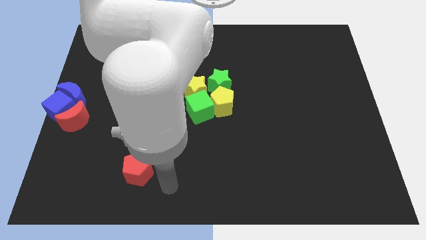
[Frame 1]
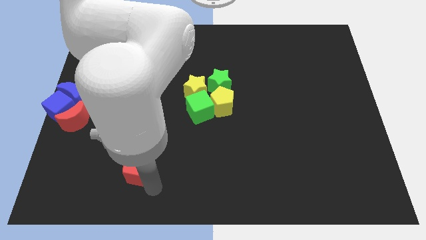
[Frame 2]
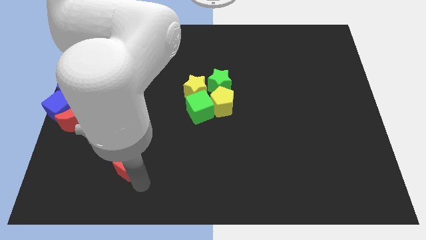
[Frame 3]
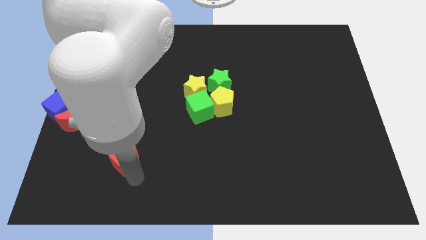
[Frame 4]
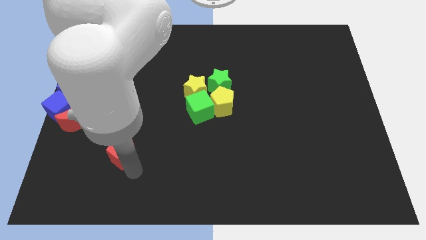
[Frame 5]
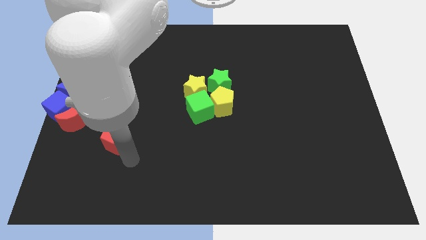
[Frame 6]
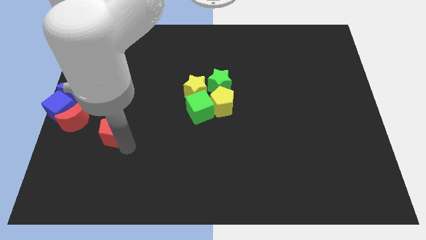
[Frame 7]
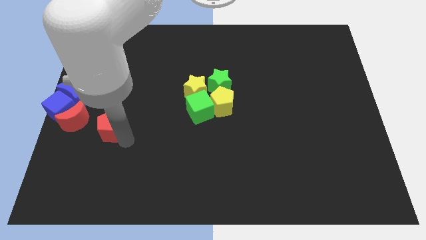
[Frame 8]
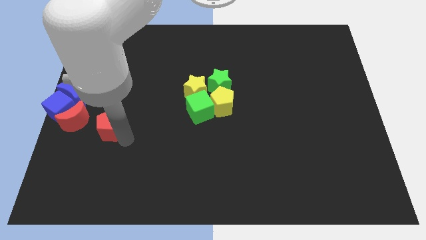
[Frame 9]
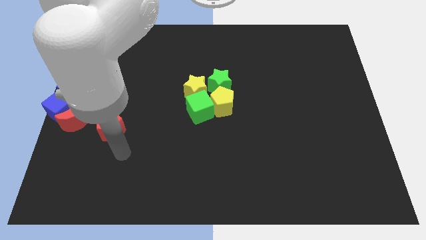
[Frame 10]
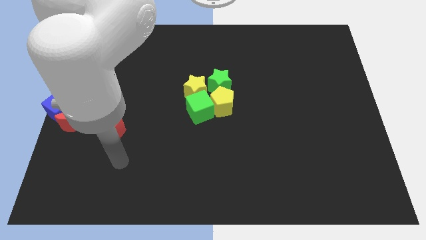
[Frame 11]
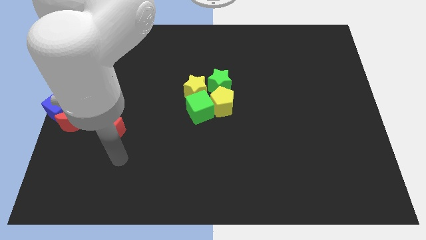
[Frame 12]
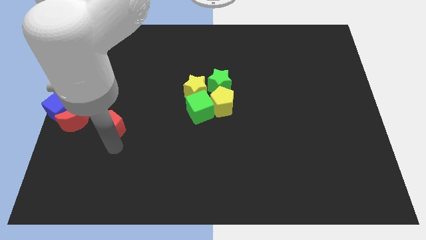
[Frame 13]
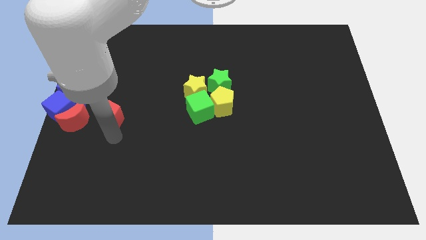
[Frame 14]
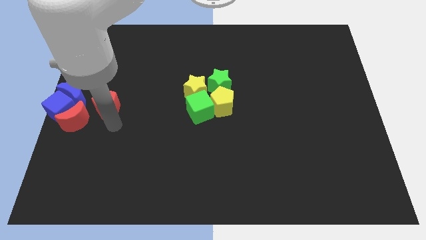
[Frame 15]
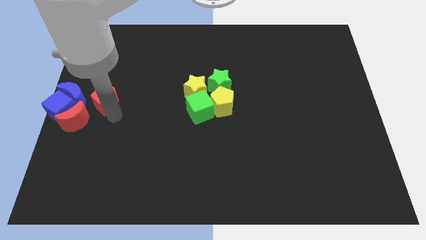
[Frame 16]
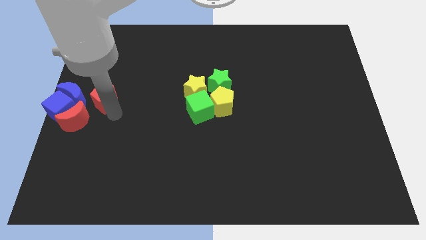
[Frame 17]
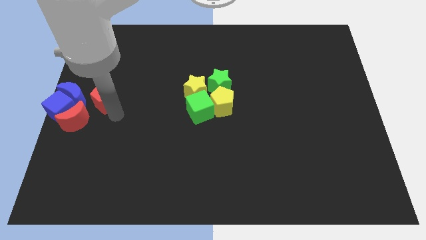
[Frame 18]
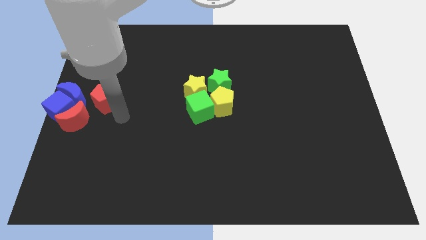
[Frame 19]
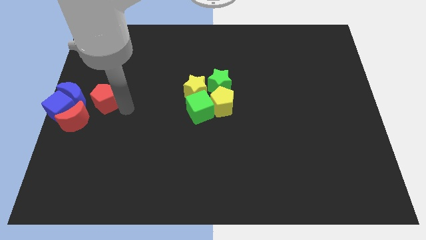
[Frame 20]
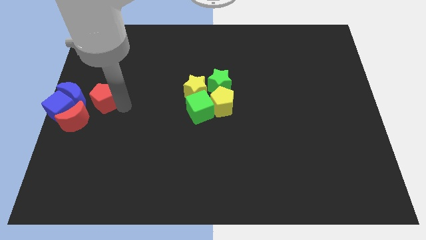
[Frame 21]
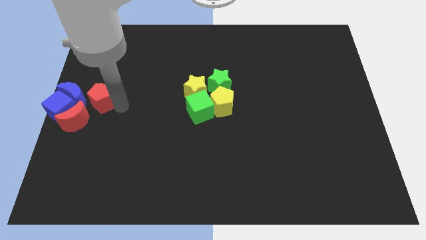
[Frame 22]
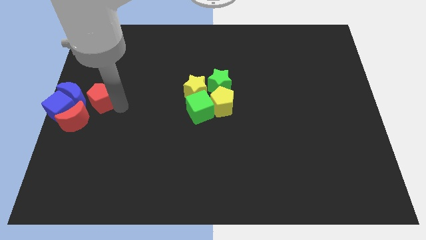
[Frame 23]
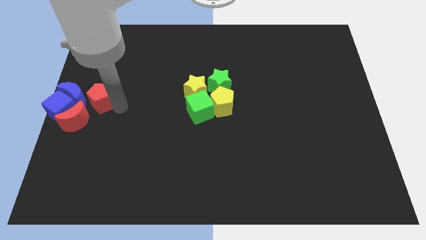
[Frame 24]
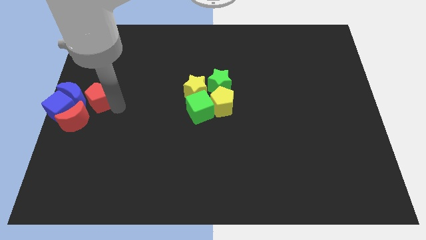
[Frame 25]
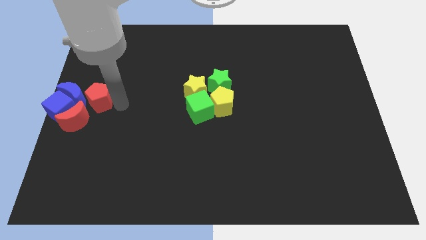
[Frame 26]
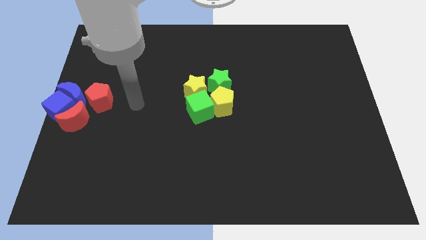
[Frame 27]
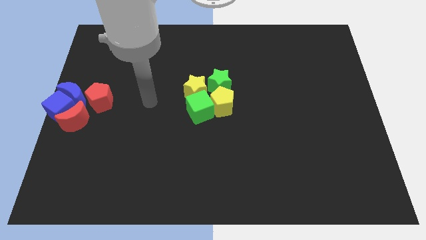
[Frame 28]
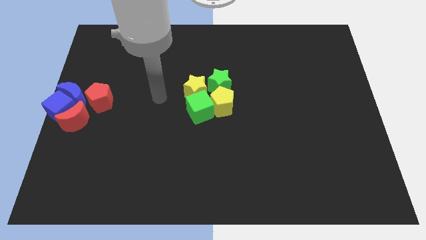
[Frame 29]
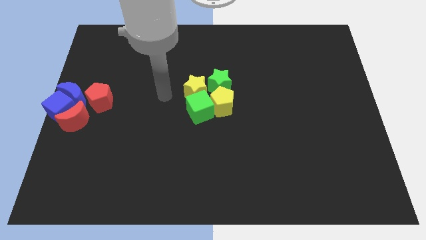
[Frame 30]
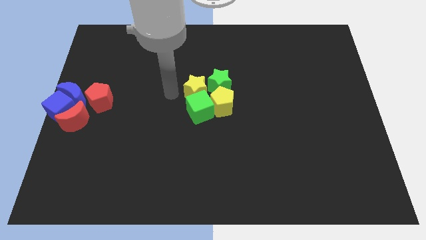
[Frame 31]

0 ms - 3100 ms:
move red pentagon near to the blue moon

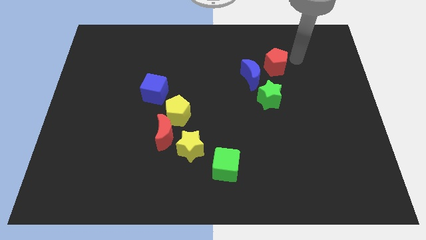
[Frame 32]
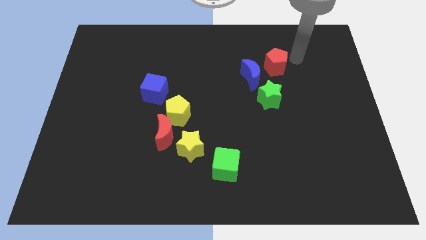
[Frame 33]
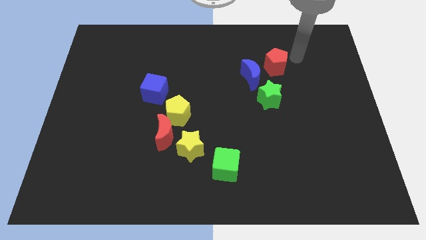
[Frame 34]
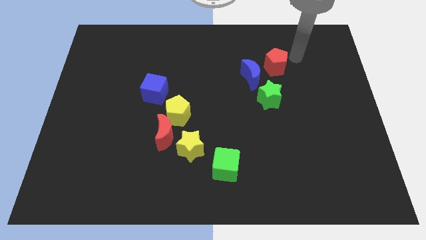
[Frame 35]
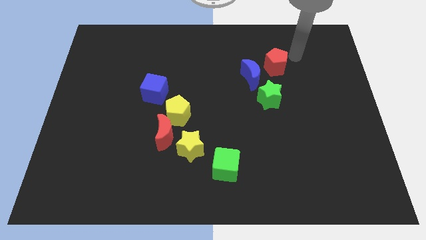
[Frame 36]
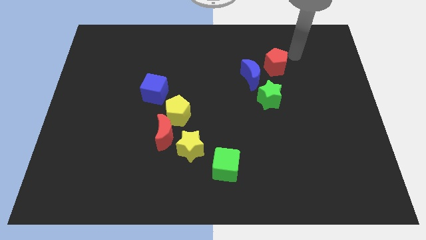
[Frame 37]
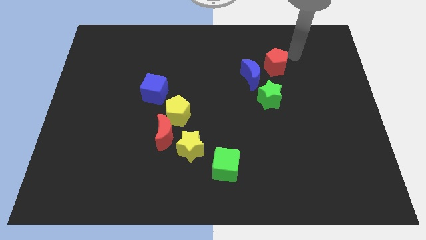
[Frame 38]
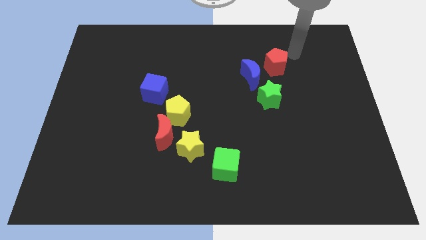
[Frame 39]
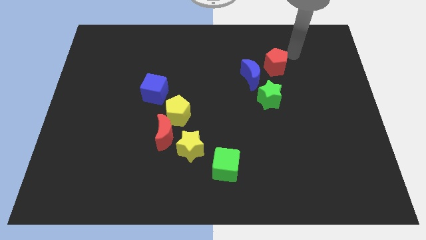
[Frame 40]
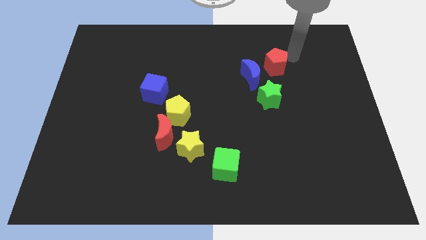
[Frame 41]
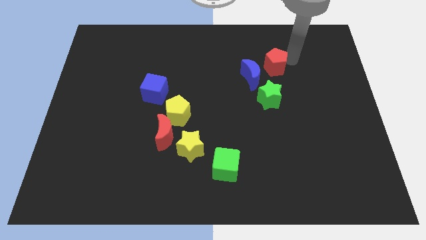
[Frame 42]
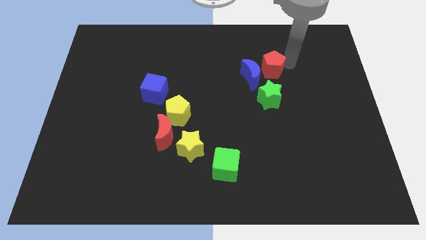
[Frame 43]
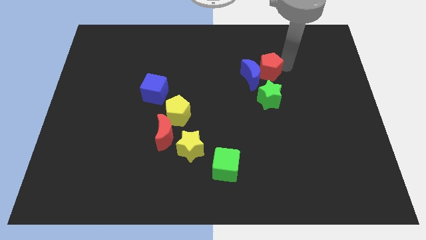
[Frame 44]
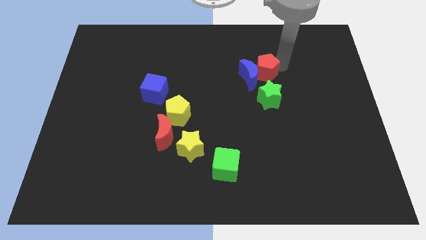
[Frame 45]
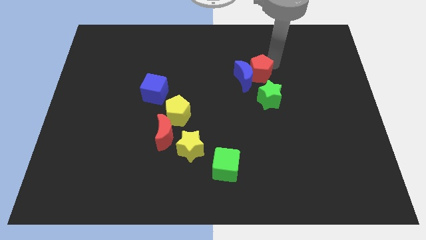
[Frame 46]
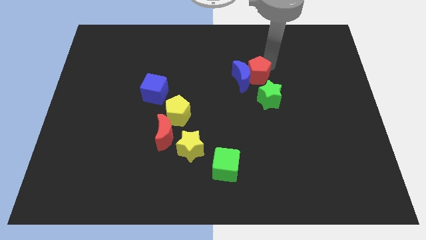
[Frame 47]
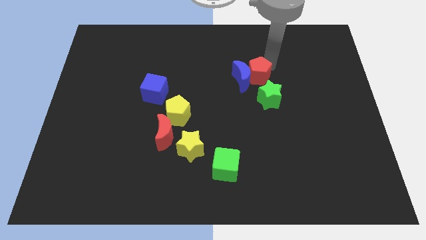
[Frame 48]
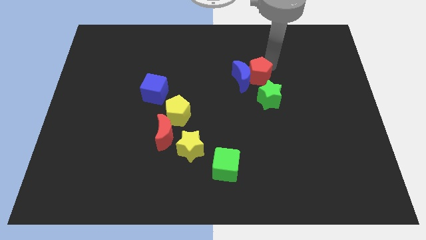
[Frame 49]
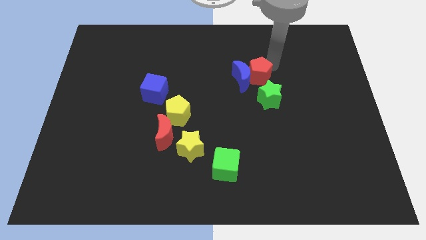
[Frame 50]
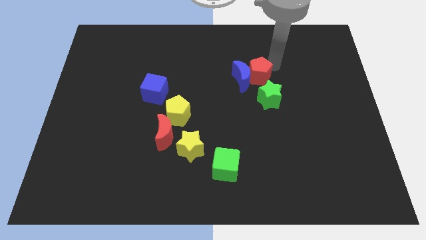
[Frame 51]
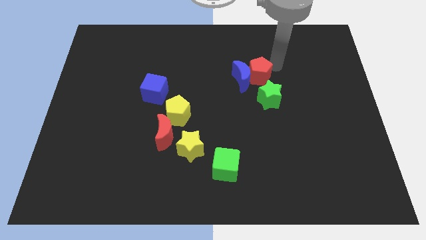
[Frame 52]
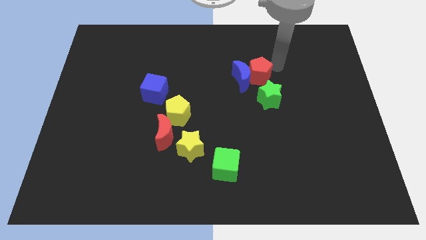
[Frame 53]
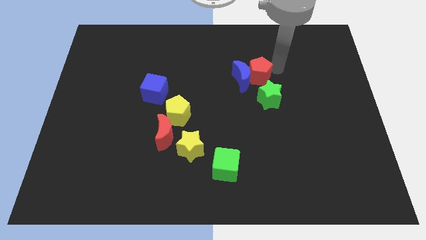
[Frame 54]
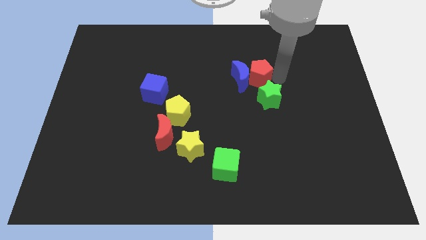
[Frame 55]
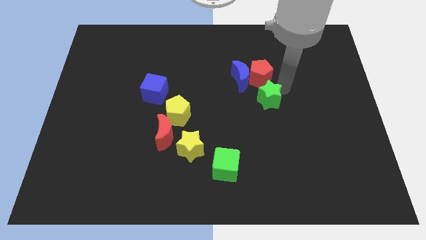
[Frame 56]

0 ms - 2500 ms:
push the red pentagon into the blue crescent

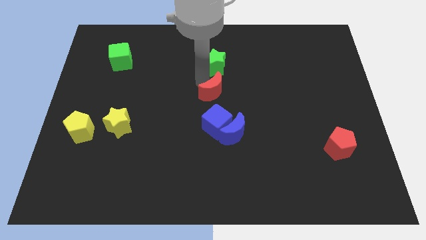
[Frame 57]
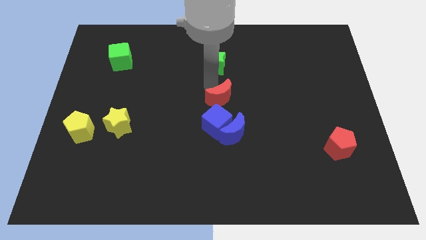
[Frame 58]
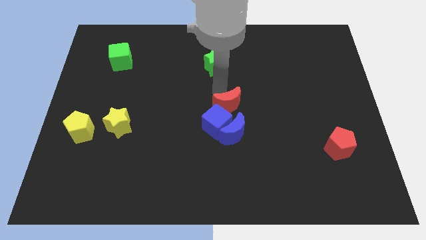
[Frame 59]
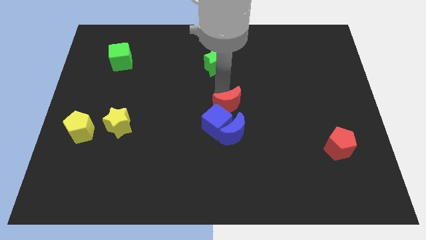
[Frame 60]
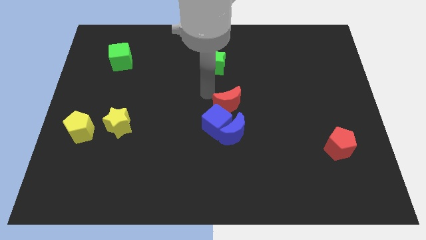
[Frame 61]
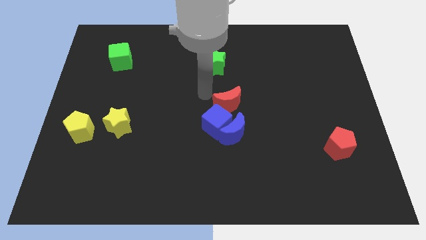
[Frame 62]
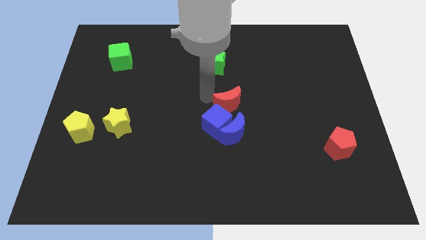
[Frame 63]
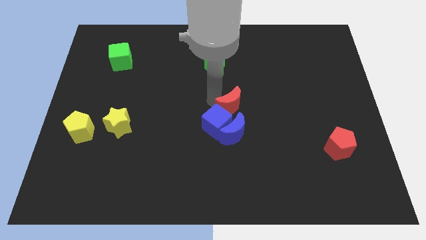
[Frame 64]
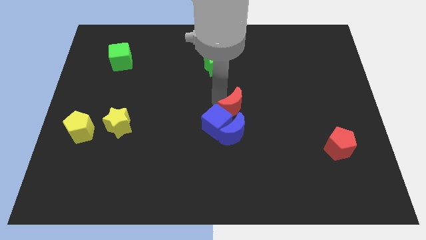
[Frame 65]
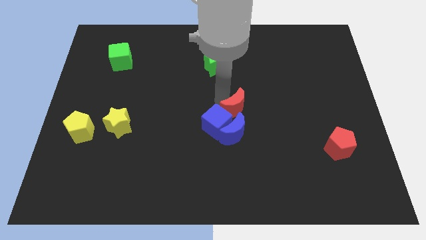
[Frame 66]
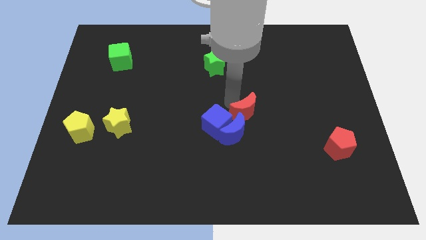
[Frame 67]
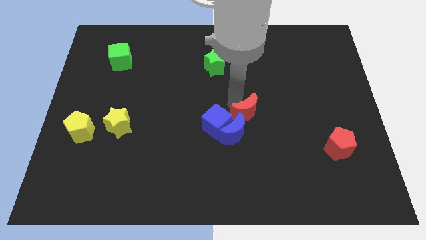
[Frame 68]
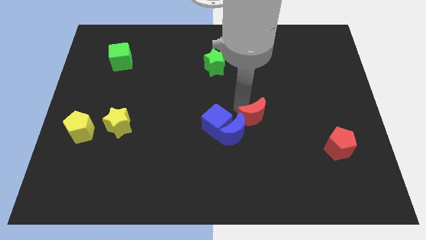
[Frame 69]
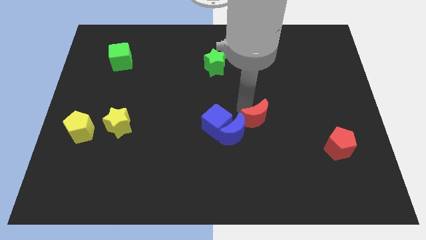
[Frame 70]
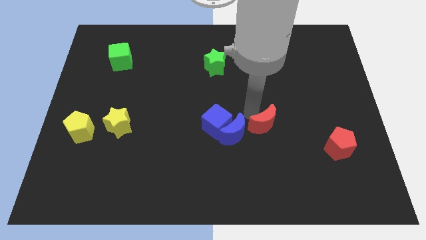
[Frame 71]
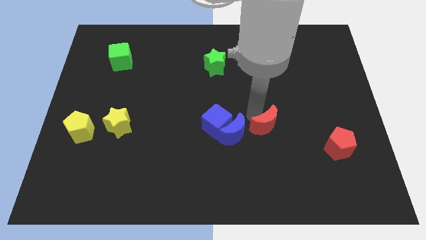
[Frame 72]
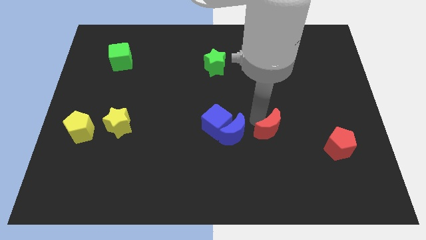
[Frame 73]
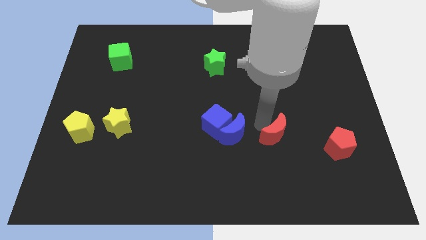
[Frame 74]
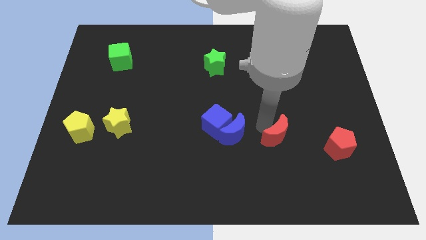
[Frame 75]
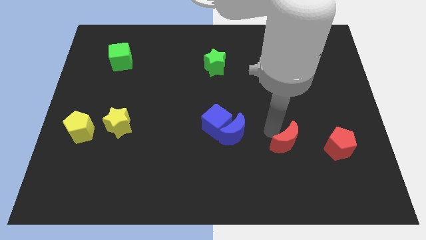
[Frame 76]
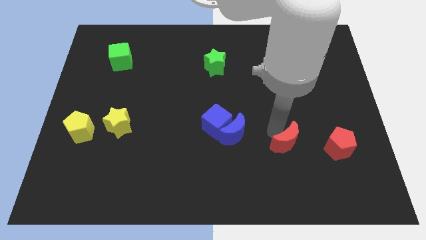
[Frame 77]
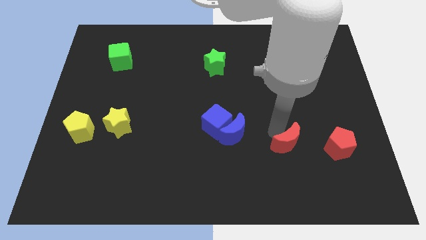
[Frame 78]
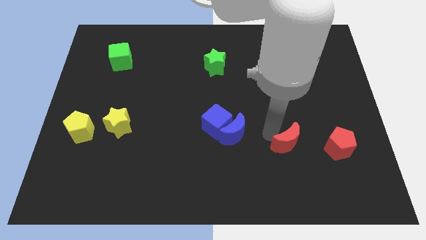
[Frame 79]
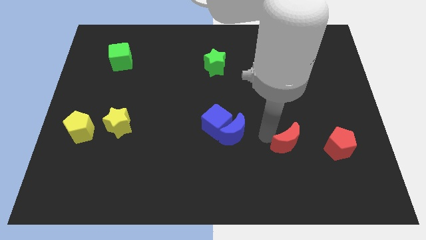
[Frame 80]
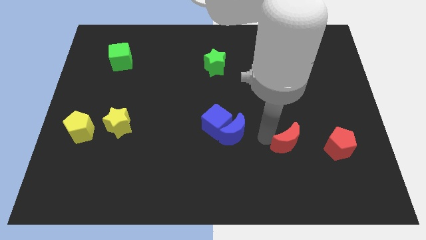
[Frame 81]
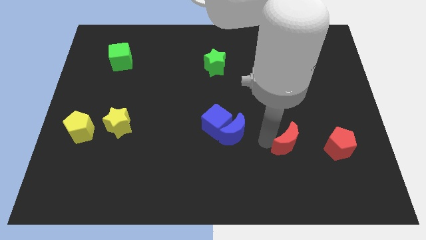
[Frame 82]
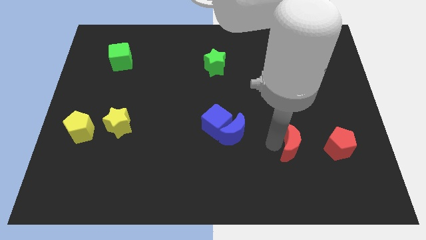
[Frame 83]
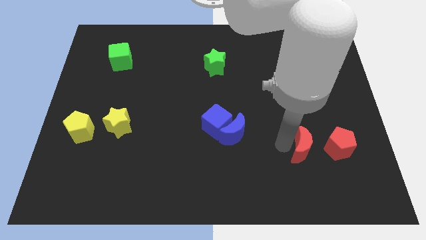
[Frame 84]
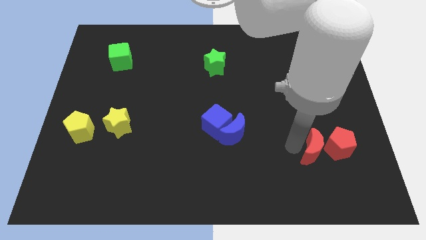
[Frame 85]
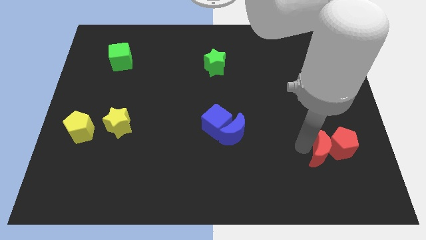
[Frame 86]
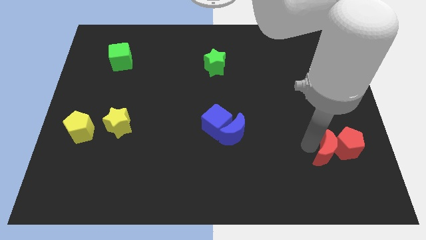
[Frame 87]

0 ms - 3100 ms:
push the red crescent into the red pentagon

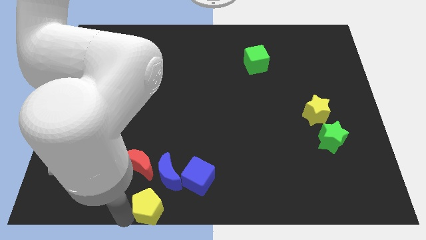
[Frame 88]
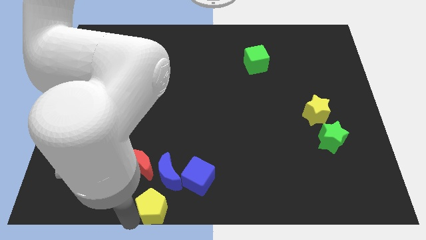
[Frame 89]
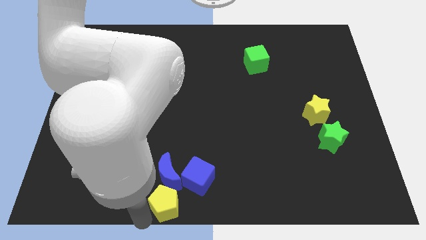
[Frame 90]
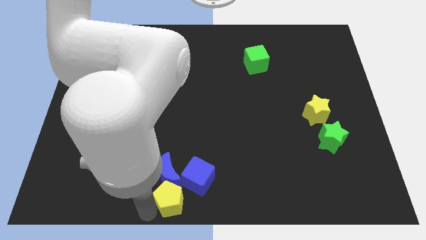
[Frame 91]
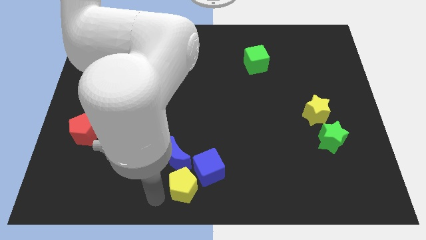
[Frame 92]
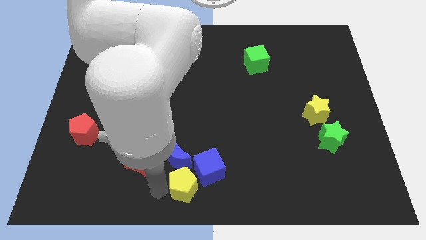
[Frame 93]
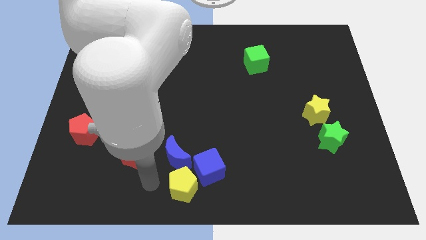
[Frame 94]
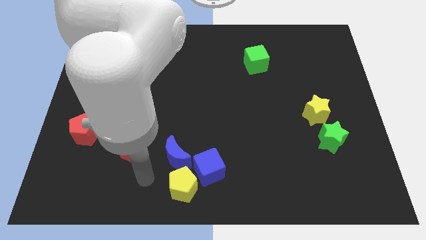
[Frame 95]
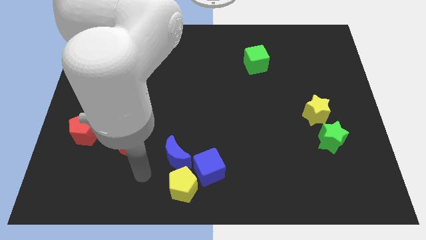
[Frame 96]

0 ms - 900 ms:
push the yellow pentagon into the bottom side of the blue blocks
